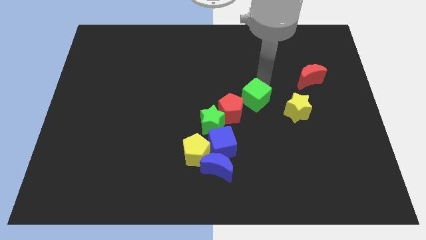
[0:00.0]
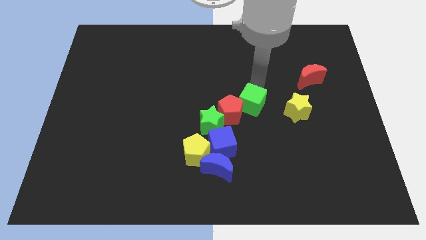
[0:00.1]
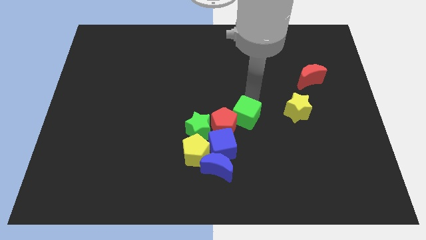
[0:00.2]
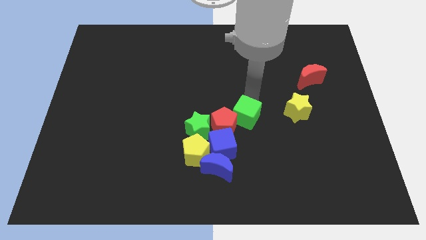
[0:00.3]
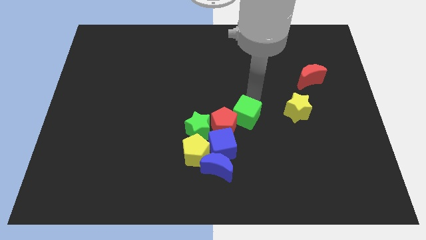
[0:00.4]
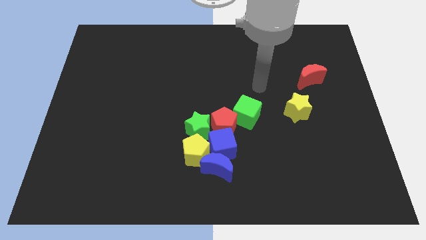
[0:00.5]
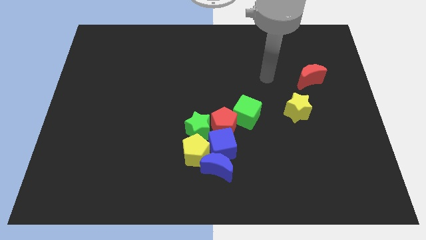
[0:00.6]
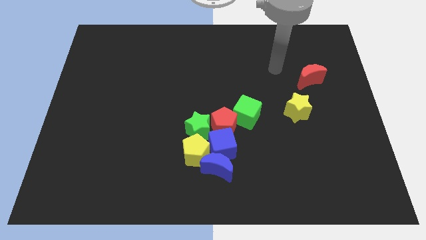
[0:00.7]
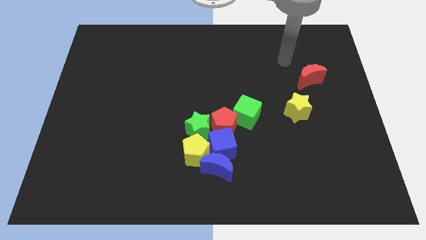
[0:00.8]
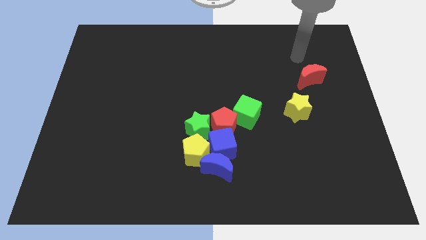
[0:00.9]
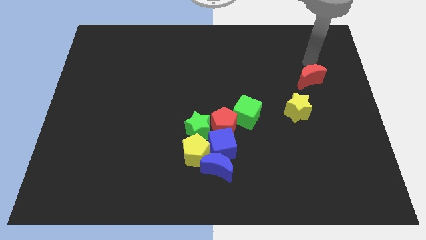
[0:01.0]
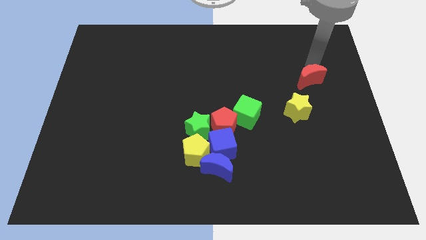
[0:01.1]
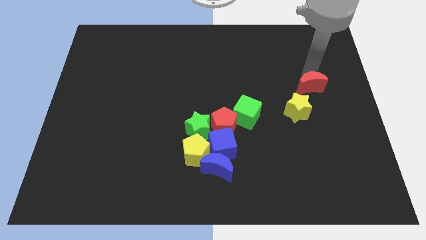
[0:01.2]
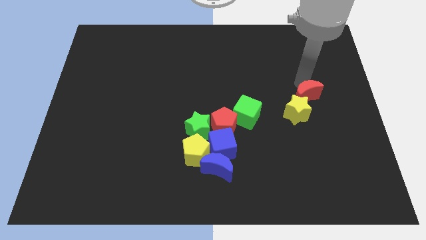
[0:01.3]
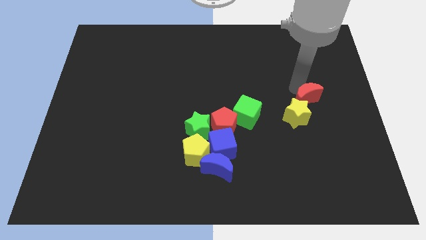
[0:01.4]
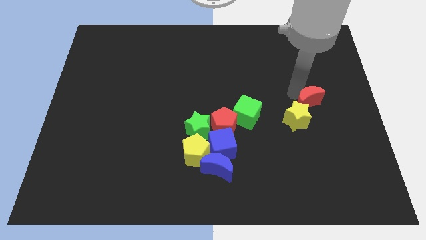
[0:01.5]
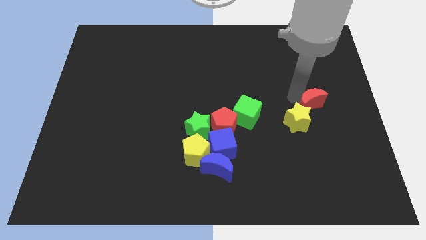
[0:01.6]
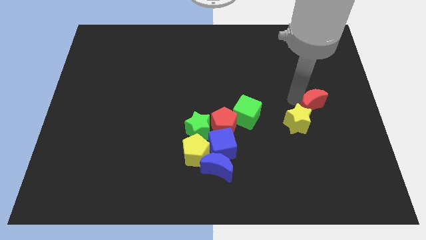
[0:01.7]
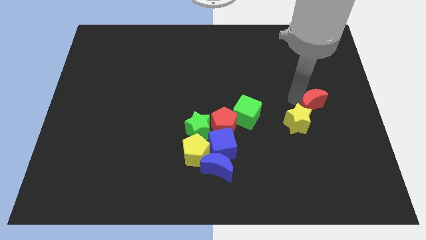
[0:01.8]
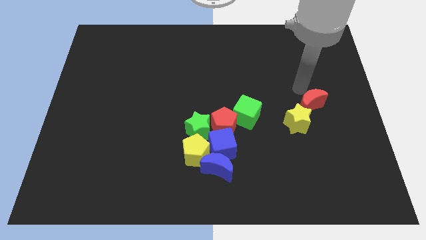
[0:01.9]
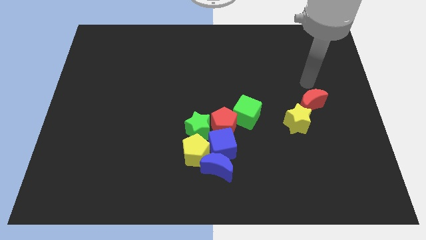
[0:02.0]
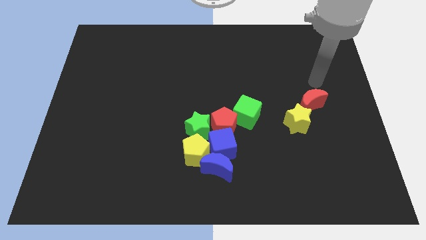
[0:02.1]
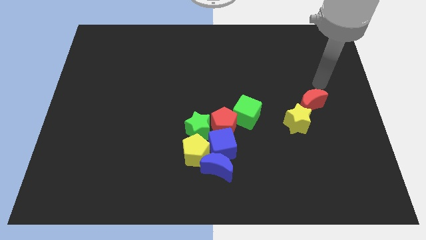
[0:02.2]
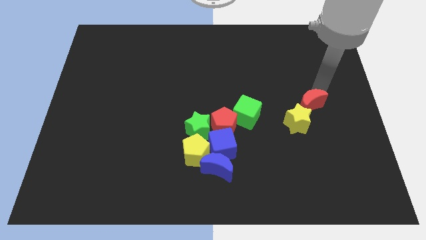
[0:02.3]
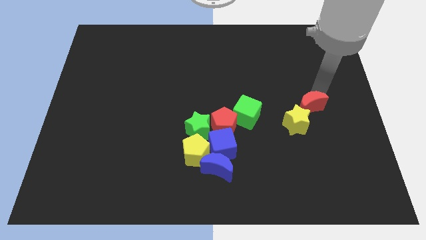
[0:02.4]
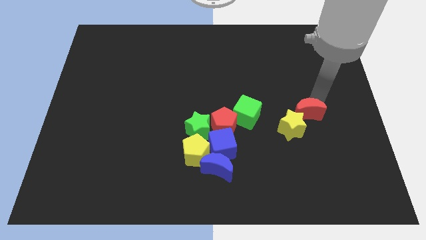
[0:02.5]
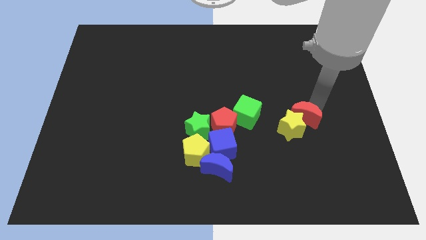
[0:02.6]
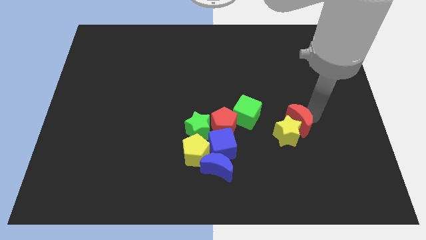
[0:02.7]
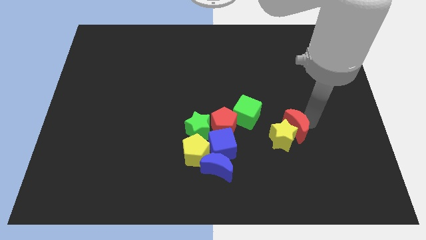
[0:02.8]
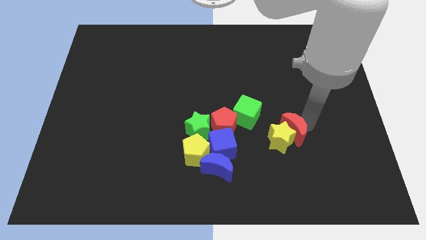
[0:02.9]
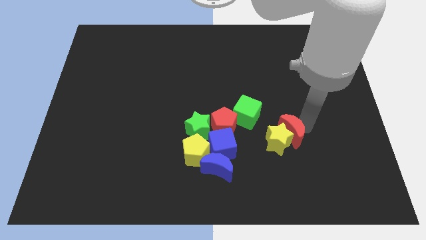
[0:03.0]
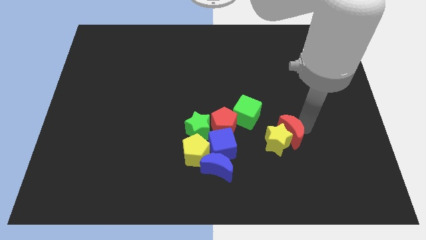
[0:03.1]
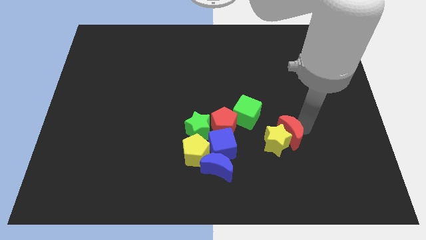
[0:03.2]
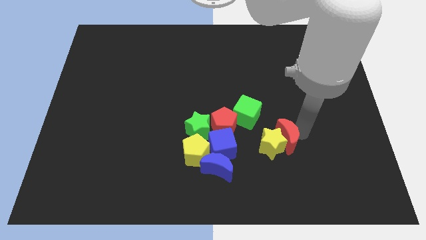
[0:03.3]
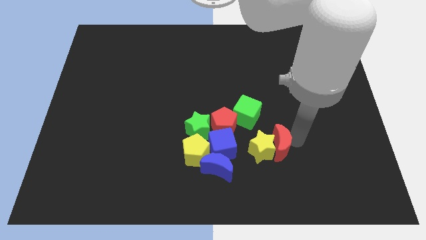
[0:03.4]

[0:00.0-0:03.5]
push the red moon into the yellow star

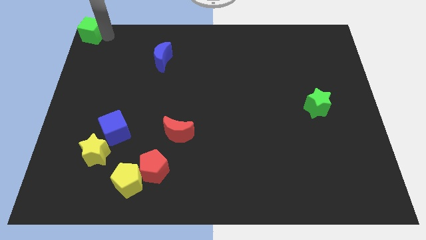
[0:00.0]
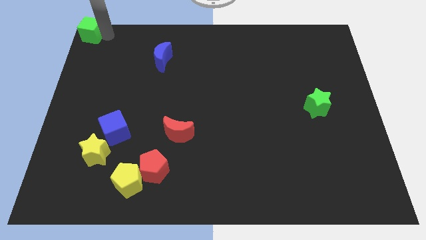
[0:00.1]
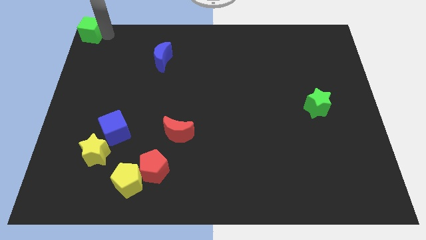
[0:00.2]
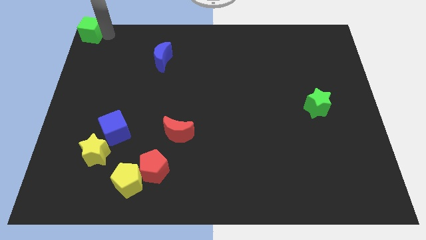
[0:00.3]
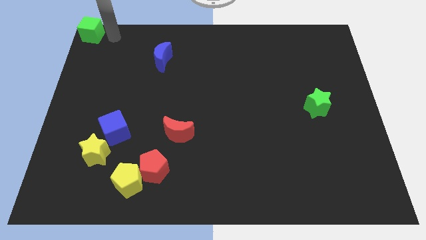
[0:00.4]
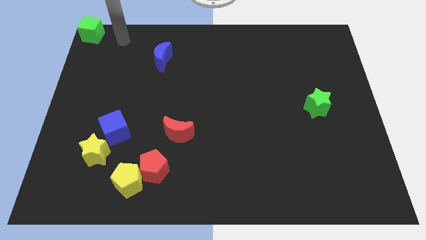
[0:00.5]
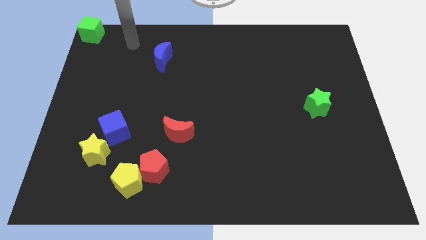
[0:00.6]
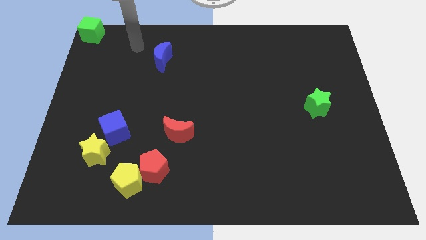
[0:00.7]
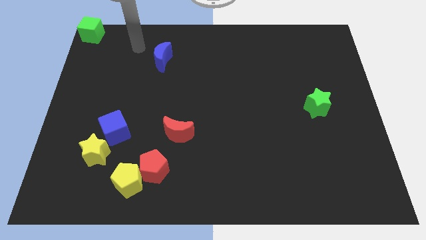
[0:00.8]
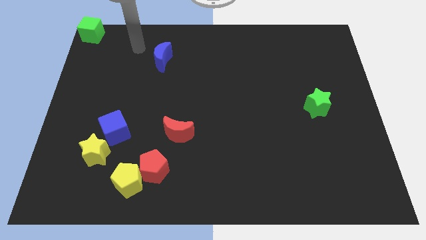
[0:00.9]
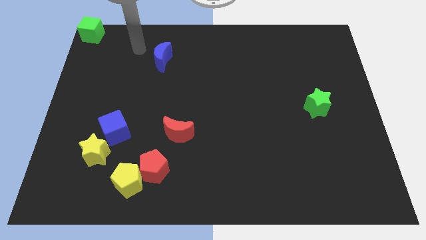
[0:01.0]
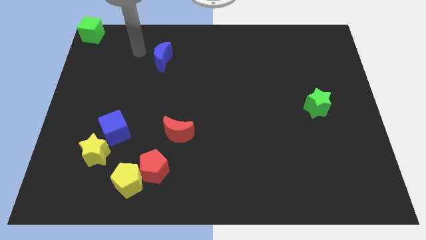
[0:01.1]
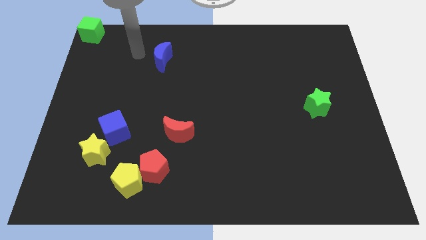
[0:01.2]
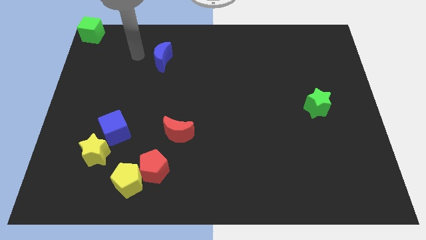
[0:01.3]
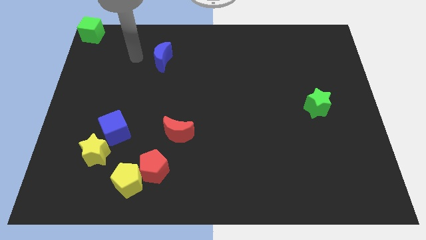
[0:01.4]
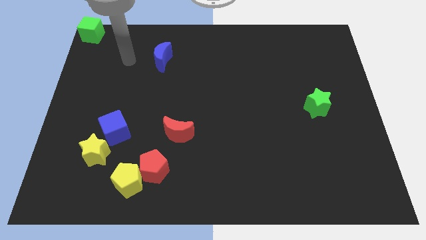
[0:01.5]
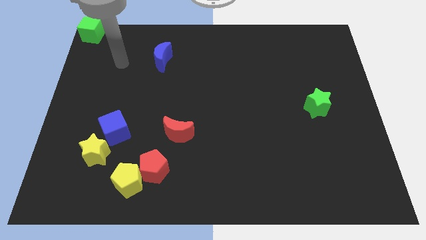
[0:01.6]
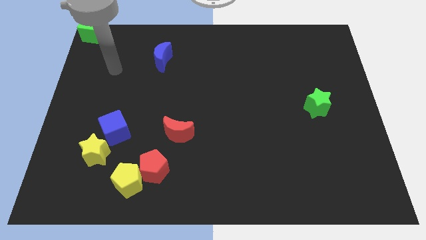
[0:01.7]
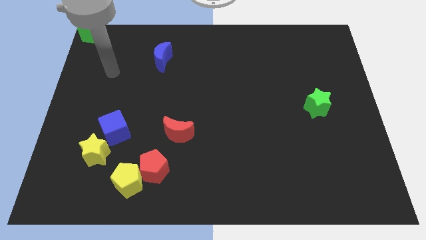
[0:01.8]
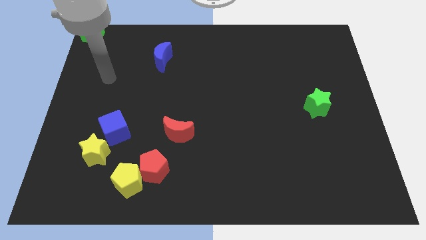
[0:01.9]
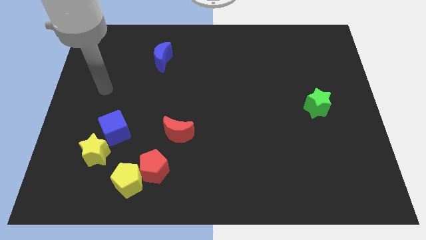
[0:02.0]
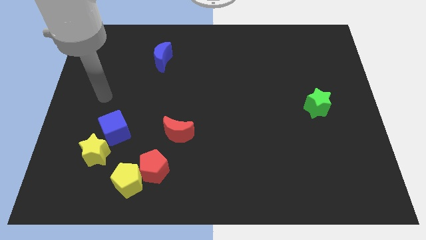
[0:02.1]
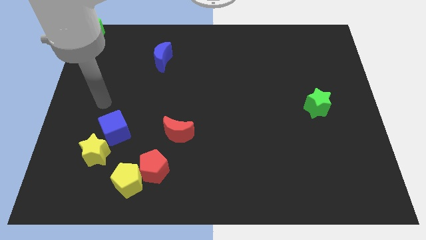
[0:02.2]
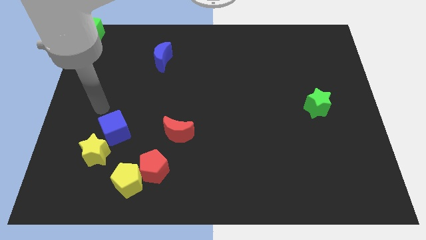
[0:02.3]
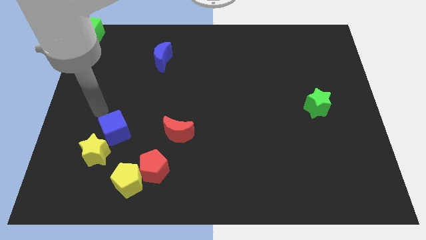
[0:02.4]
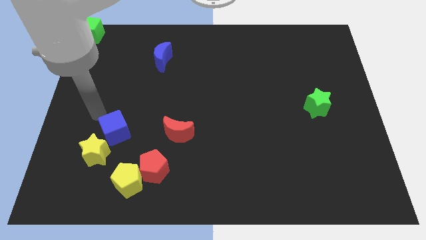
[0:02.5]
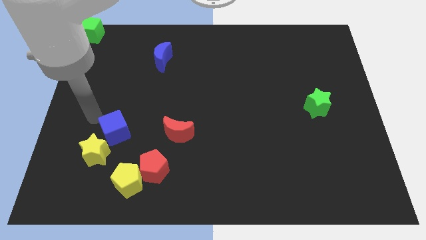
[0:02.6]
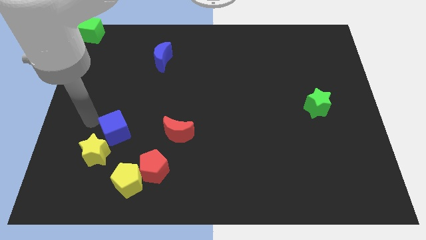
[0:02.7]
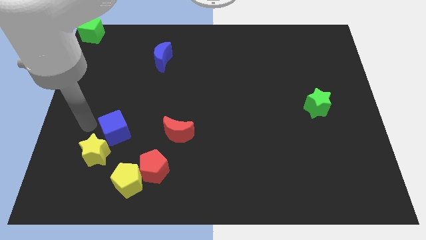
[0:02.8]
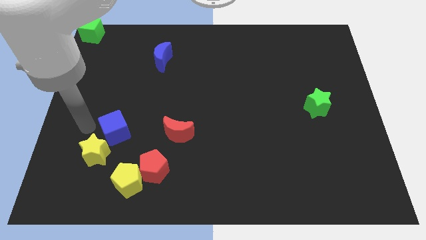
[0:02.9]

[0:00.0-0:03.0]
point your arm at the left of the blue cube

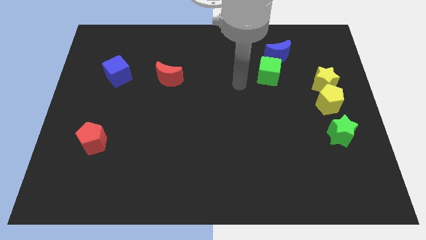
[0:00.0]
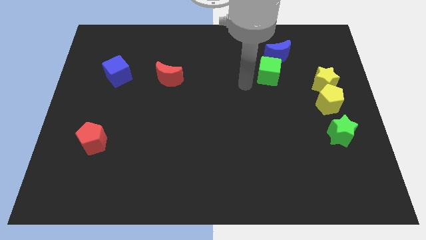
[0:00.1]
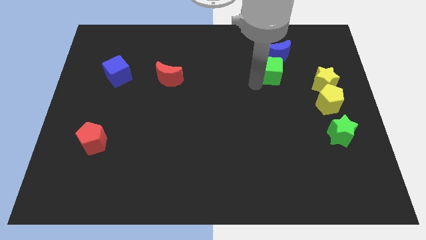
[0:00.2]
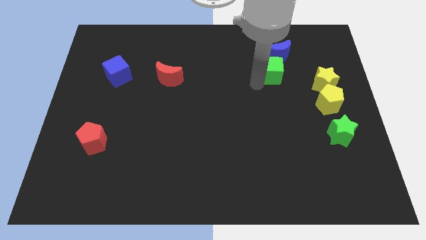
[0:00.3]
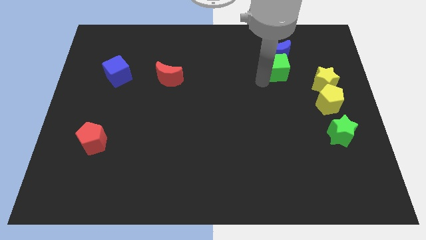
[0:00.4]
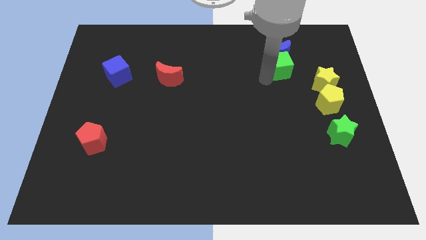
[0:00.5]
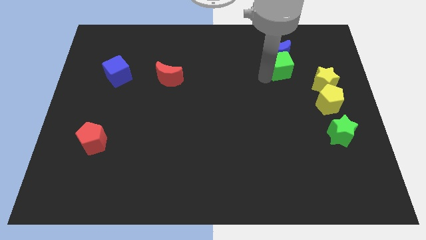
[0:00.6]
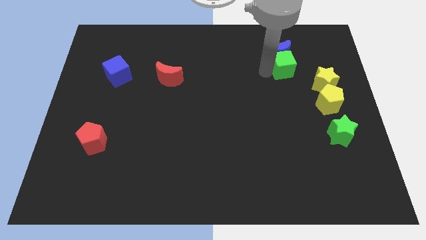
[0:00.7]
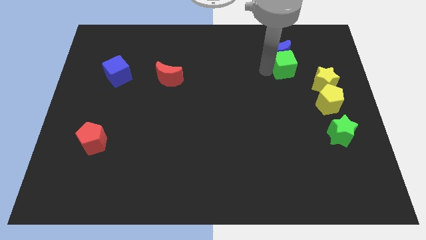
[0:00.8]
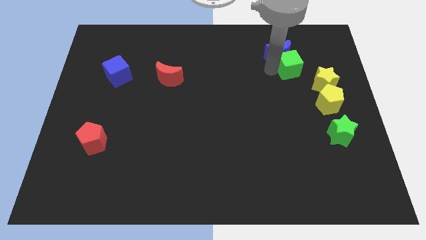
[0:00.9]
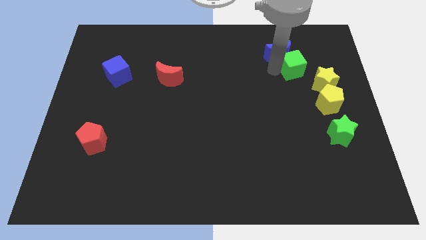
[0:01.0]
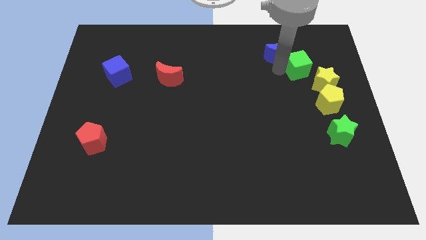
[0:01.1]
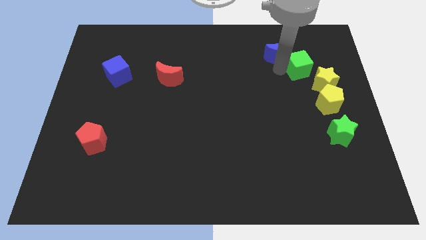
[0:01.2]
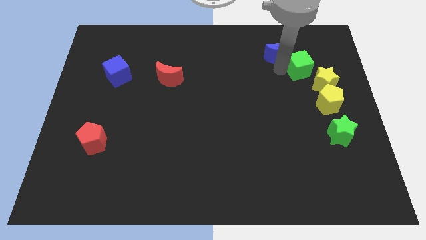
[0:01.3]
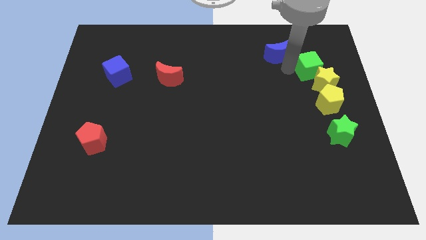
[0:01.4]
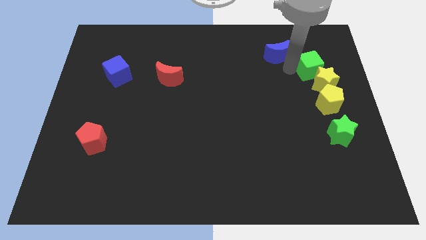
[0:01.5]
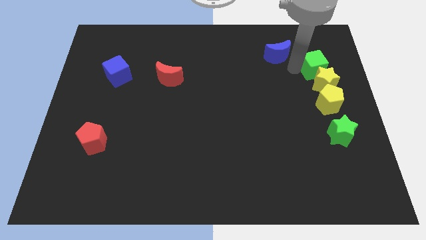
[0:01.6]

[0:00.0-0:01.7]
move the green cube into the yellow star

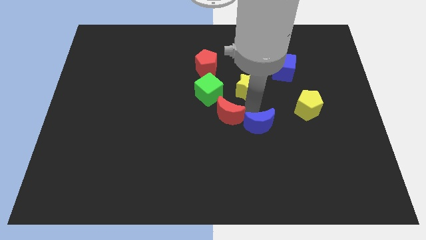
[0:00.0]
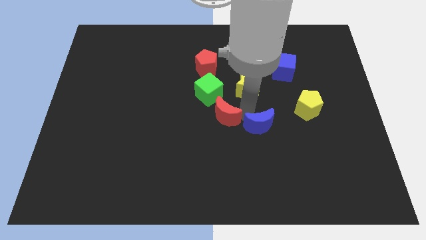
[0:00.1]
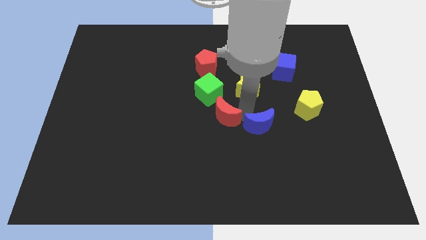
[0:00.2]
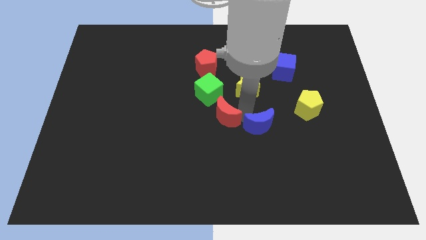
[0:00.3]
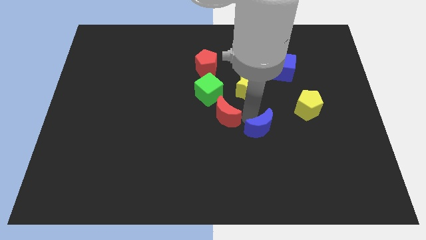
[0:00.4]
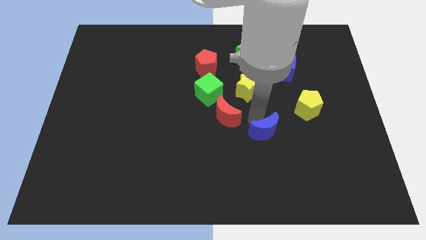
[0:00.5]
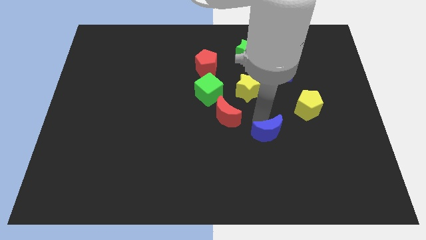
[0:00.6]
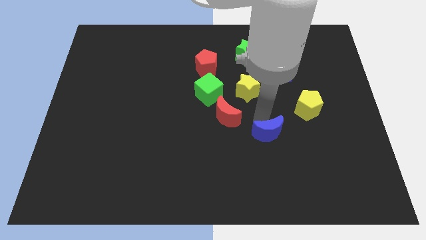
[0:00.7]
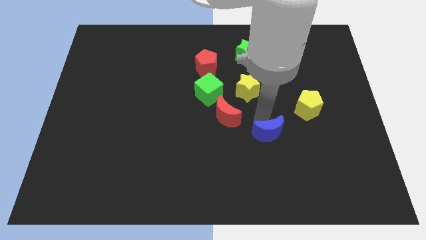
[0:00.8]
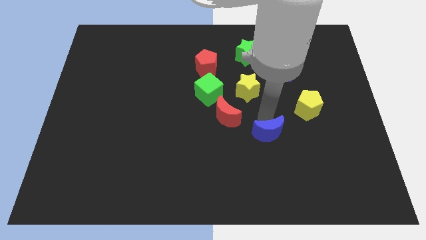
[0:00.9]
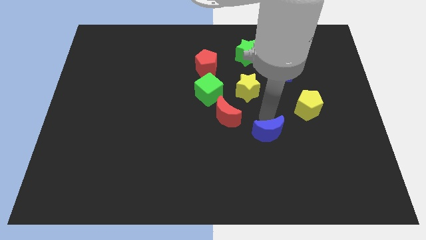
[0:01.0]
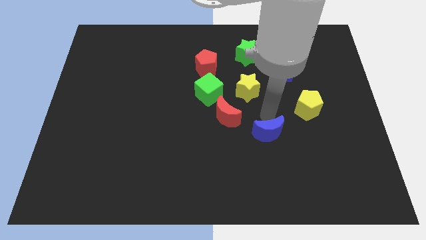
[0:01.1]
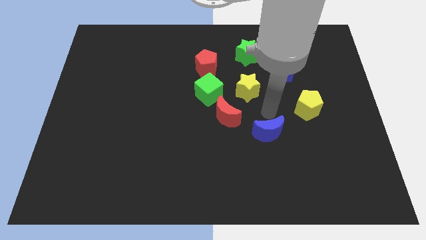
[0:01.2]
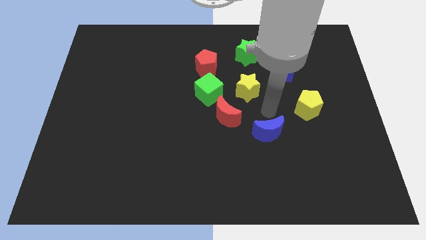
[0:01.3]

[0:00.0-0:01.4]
separate the blue moon from the red moon
